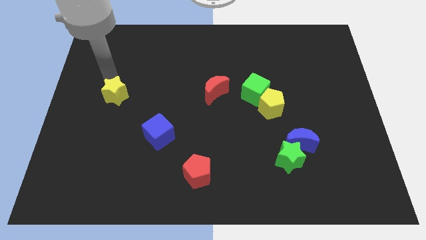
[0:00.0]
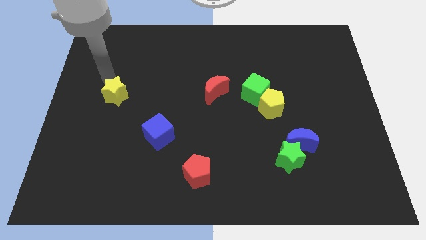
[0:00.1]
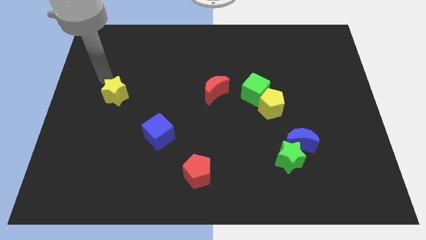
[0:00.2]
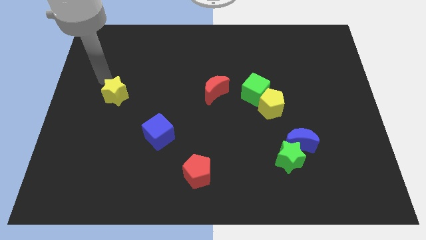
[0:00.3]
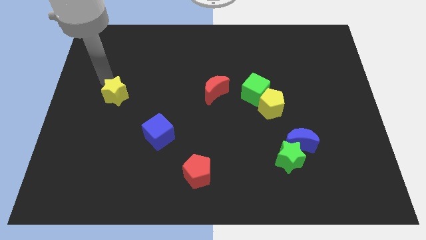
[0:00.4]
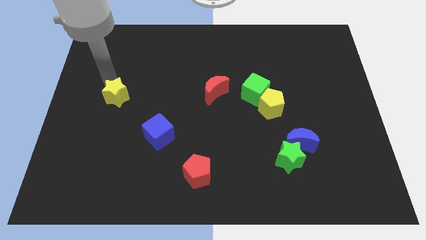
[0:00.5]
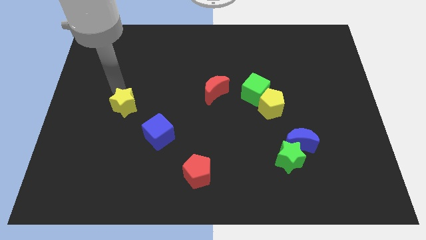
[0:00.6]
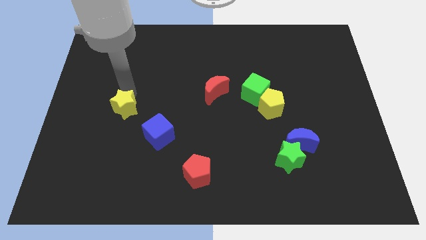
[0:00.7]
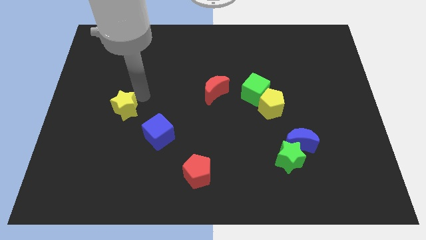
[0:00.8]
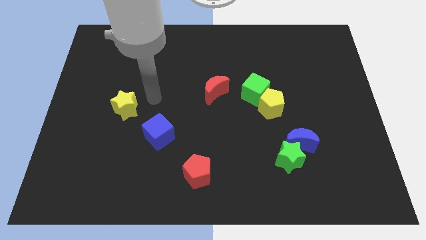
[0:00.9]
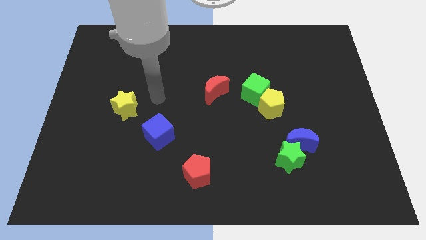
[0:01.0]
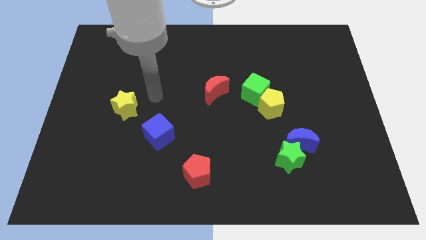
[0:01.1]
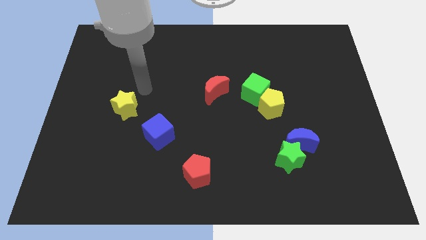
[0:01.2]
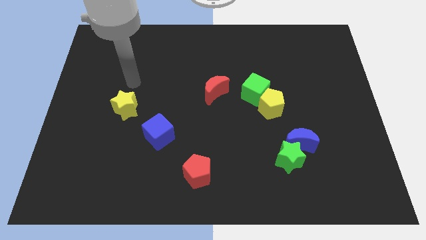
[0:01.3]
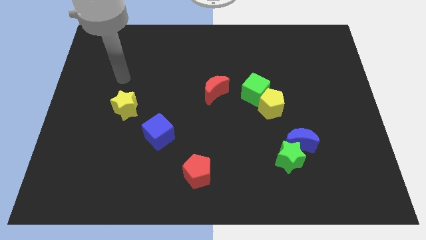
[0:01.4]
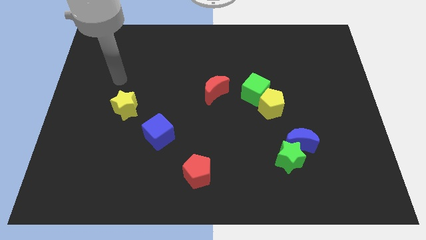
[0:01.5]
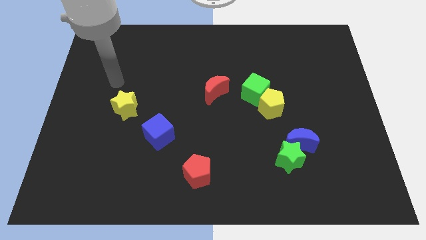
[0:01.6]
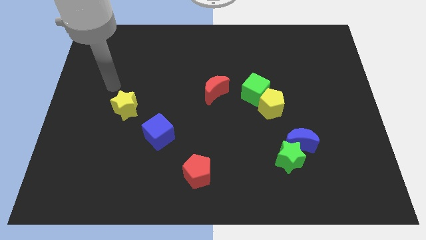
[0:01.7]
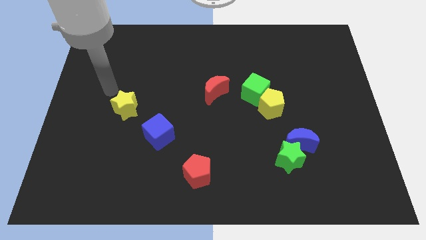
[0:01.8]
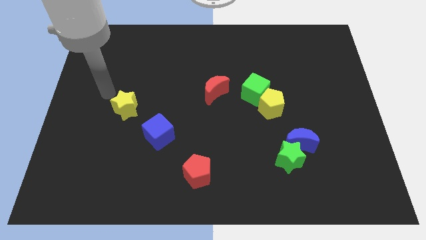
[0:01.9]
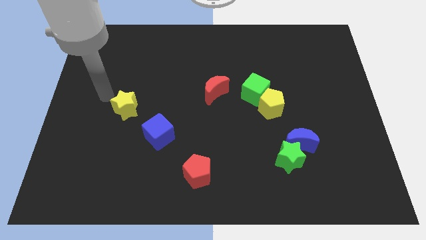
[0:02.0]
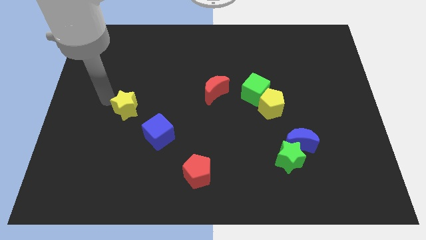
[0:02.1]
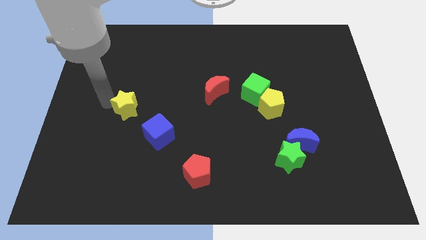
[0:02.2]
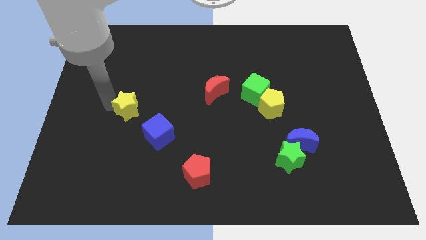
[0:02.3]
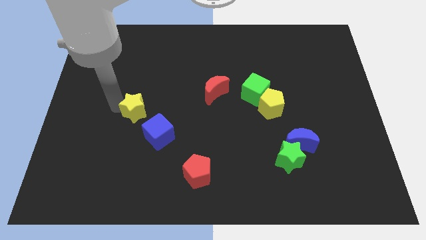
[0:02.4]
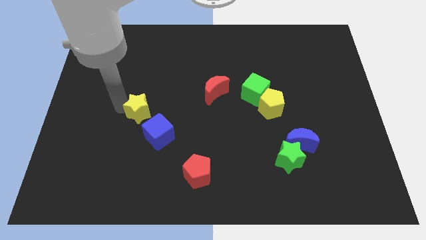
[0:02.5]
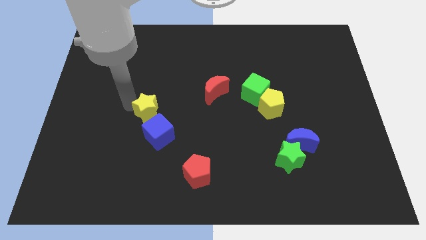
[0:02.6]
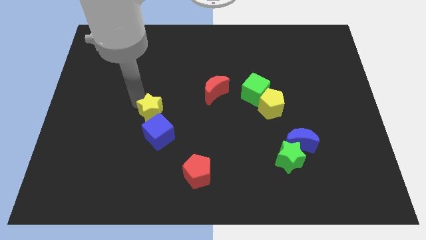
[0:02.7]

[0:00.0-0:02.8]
place the yellow star above the blue cube

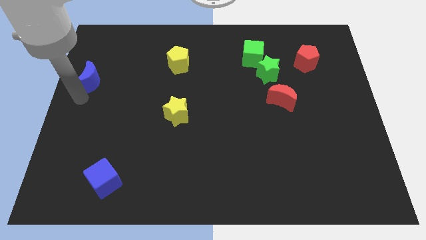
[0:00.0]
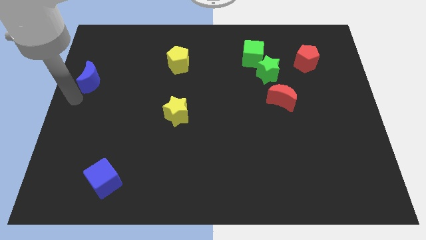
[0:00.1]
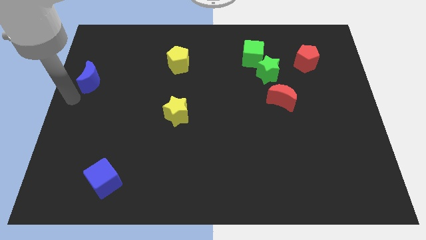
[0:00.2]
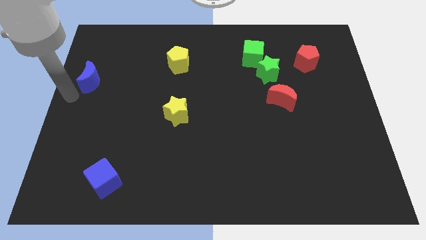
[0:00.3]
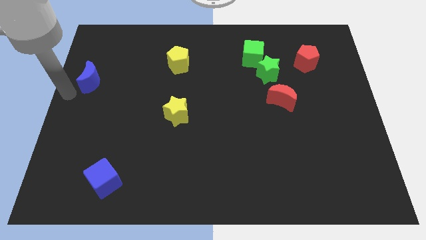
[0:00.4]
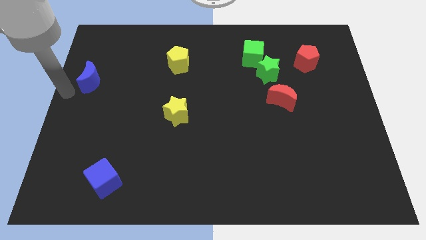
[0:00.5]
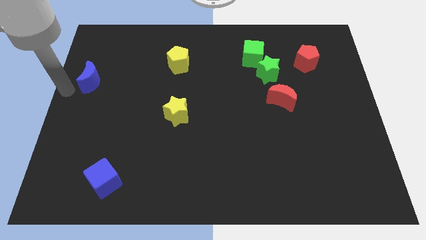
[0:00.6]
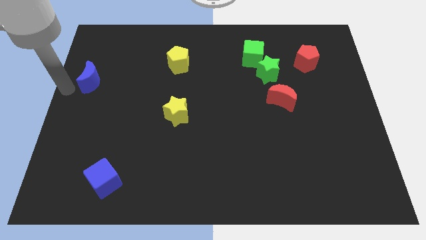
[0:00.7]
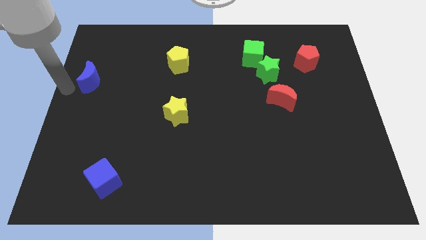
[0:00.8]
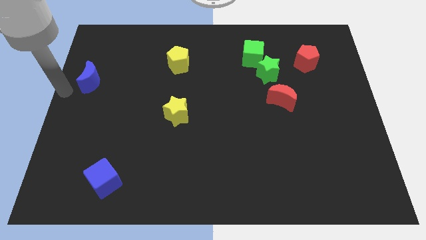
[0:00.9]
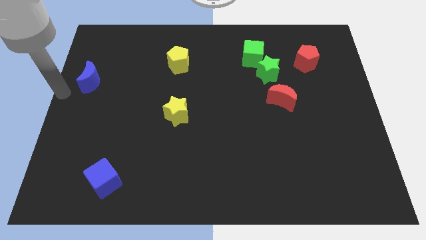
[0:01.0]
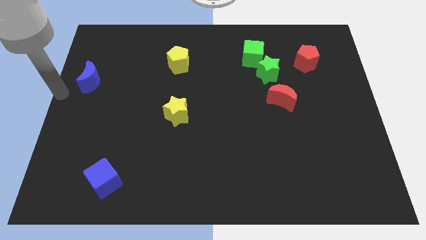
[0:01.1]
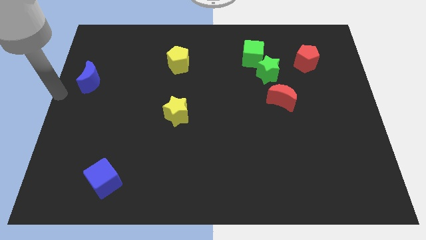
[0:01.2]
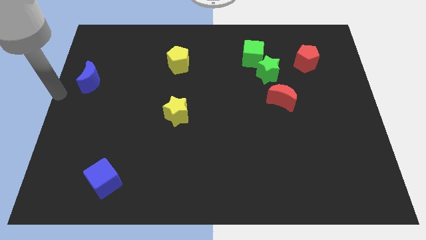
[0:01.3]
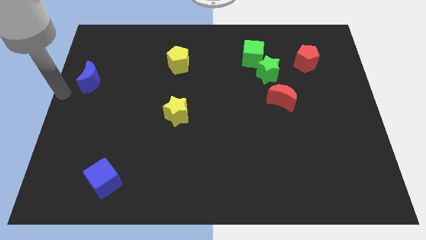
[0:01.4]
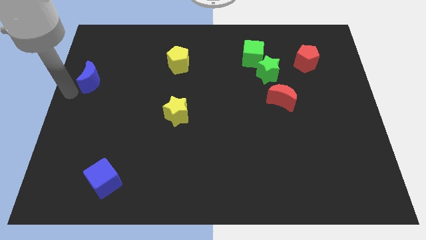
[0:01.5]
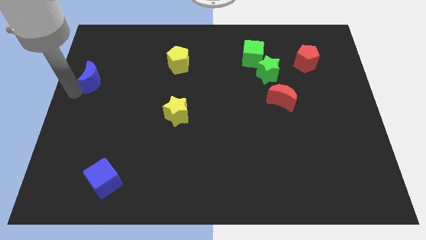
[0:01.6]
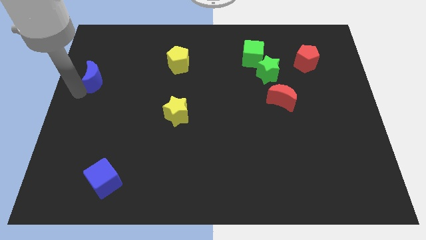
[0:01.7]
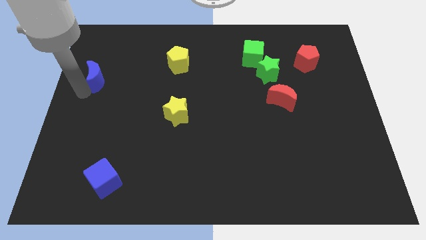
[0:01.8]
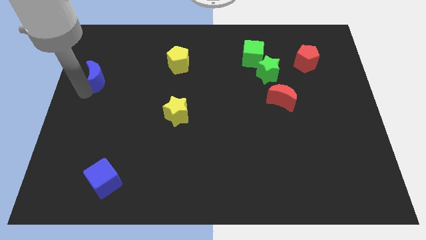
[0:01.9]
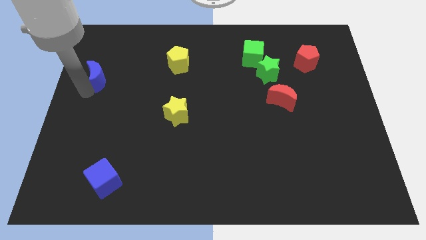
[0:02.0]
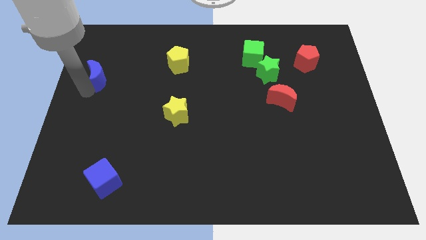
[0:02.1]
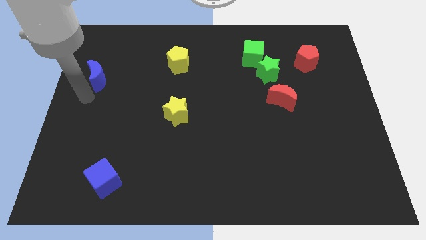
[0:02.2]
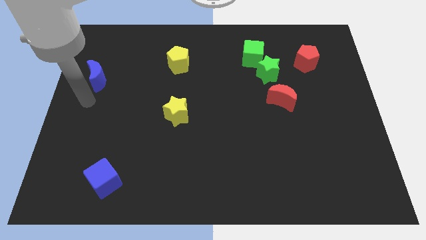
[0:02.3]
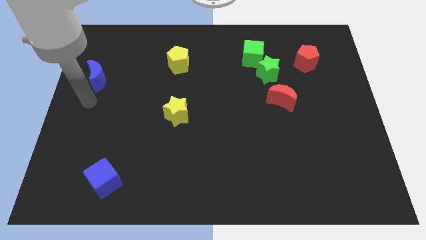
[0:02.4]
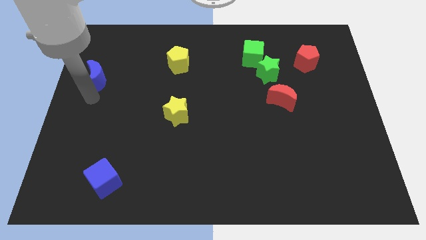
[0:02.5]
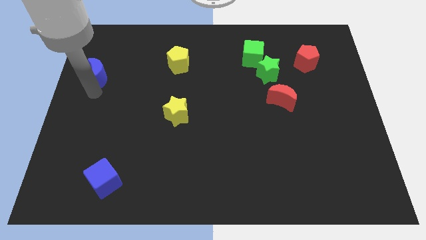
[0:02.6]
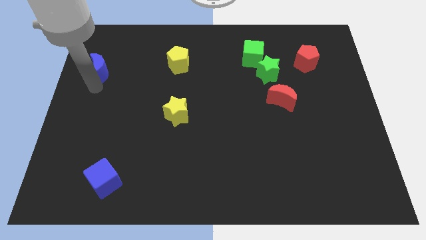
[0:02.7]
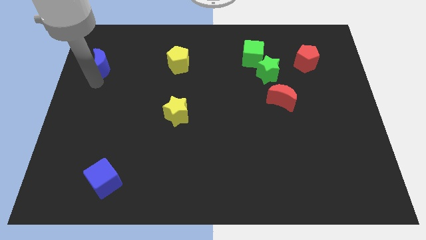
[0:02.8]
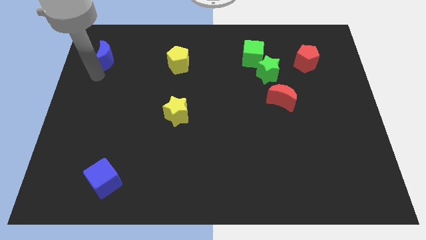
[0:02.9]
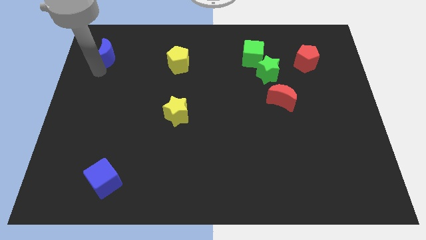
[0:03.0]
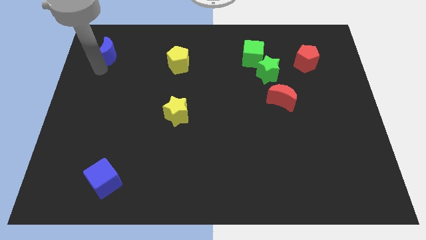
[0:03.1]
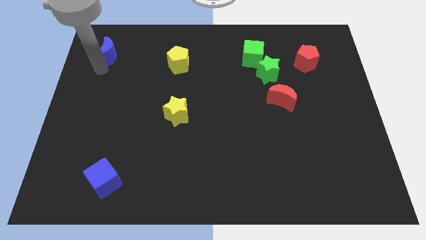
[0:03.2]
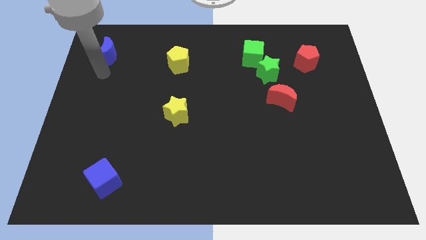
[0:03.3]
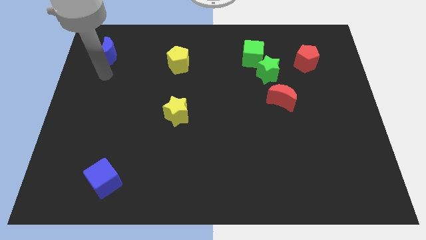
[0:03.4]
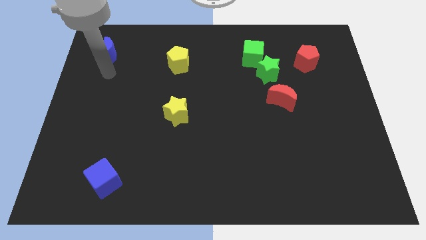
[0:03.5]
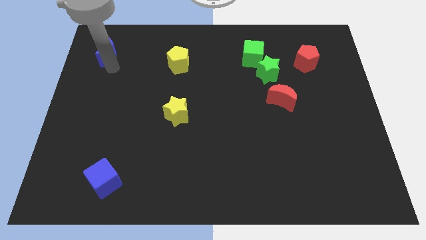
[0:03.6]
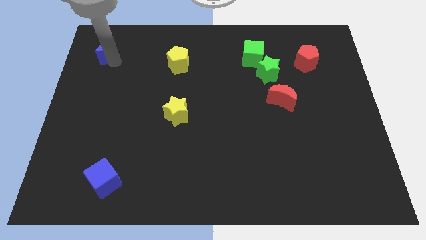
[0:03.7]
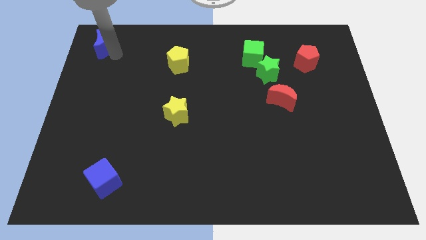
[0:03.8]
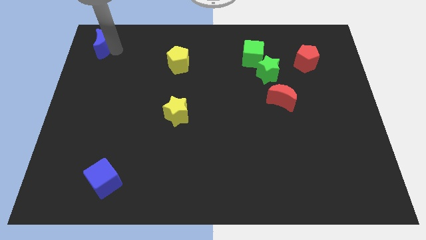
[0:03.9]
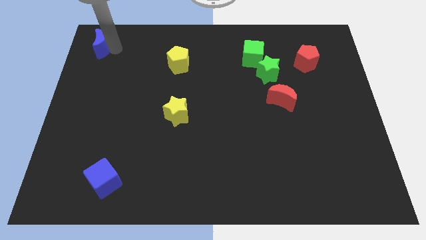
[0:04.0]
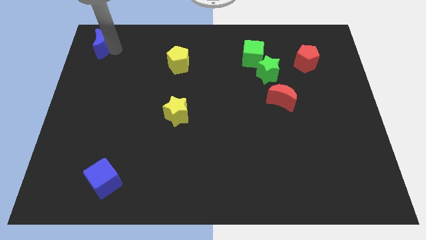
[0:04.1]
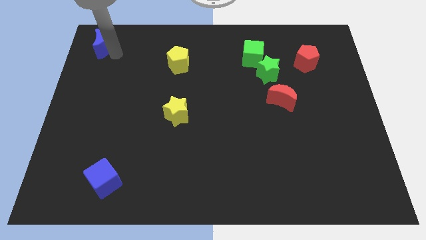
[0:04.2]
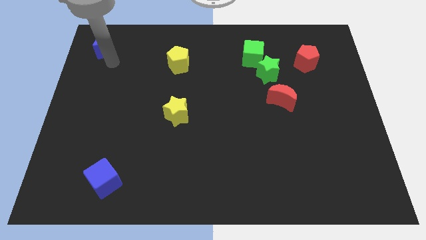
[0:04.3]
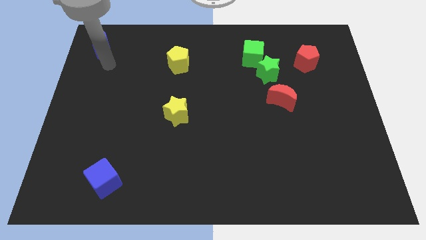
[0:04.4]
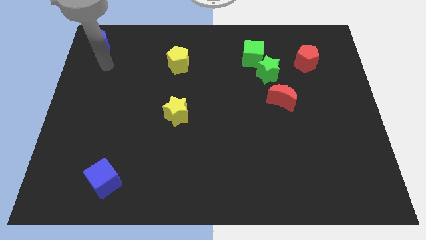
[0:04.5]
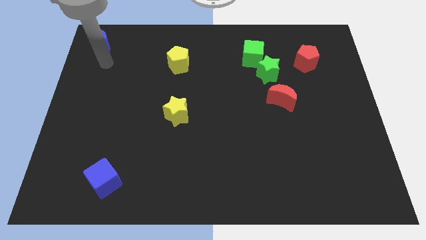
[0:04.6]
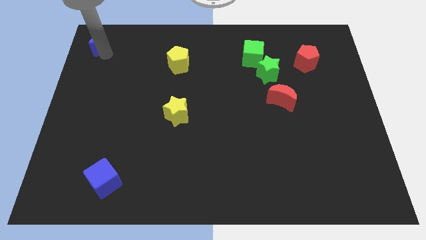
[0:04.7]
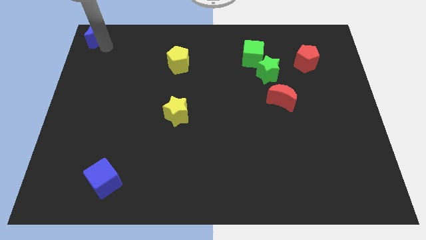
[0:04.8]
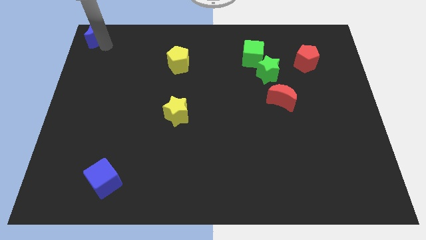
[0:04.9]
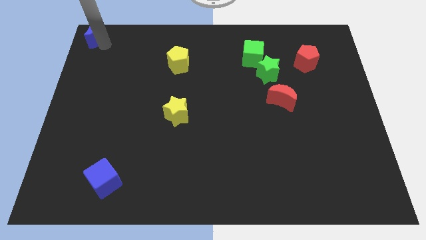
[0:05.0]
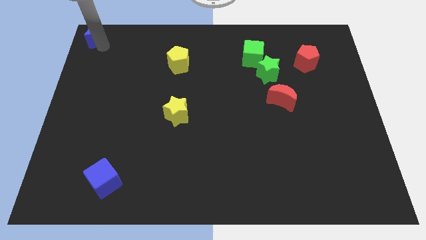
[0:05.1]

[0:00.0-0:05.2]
push the blue crescent to the top left corner

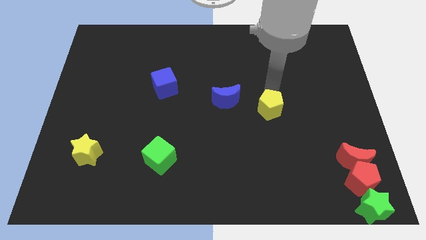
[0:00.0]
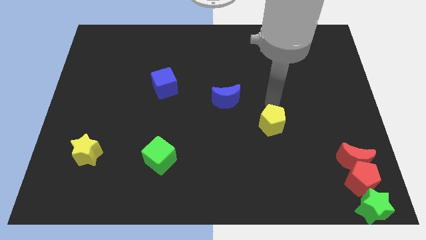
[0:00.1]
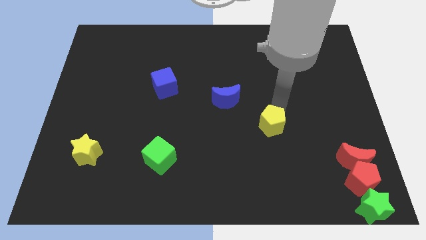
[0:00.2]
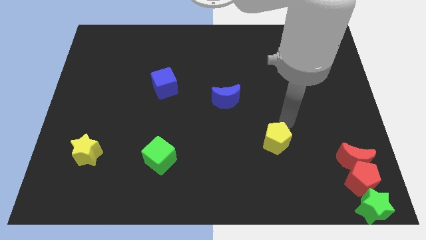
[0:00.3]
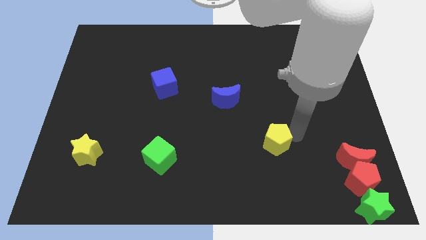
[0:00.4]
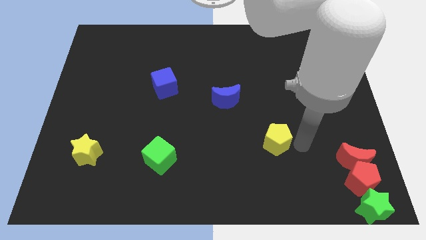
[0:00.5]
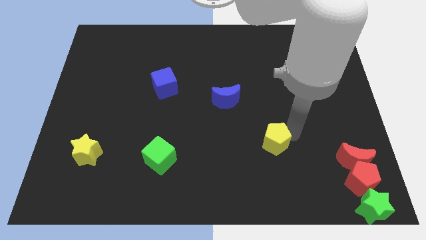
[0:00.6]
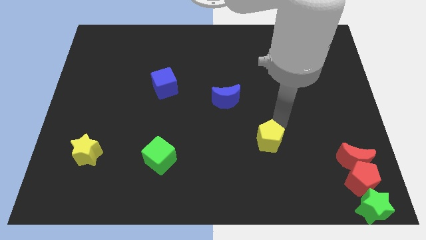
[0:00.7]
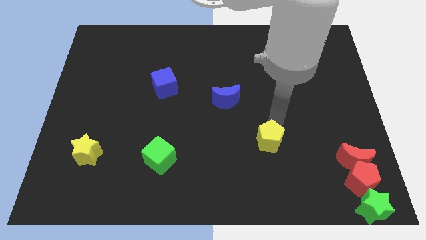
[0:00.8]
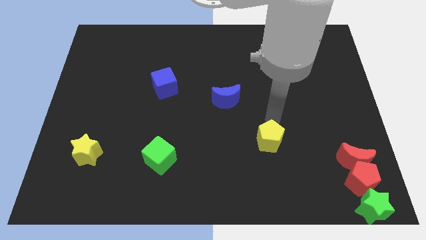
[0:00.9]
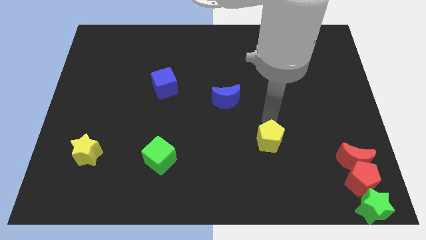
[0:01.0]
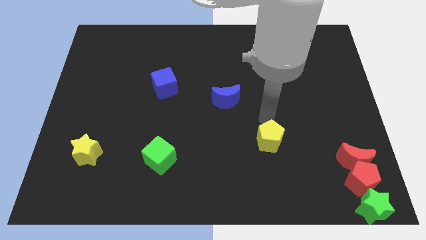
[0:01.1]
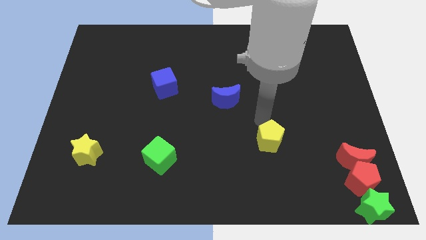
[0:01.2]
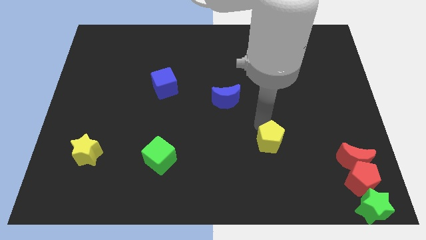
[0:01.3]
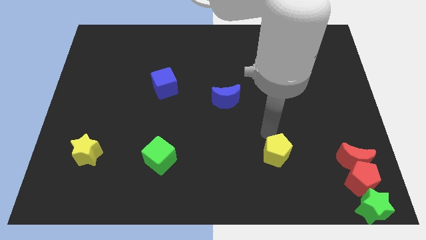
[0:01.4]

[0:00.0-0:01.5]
move the yellow pentagon horizontally to the left side red moon
